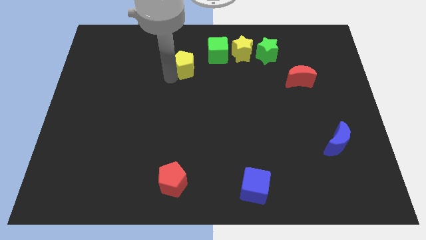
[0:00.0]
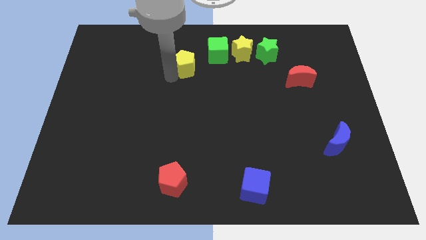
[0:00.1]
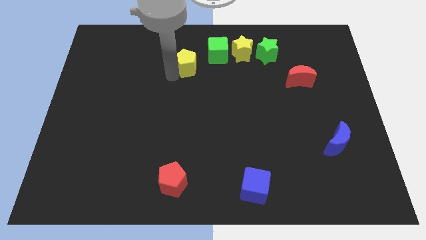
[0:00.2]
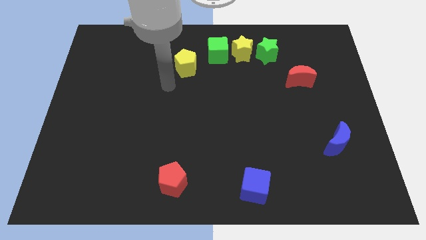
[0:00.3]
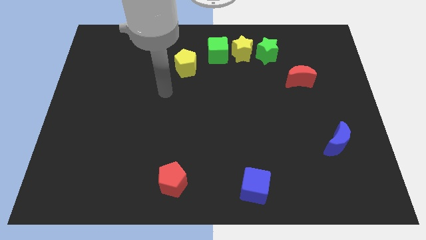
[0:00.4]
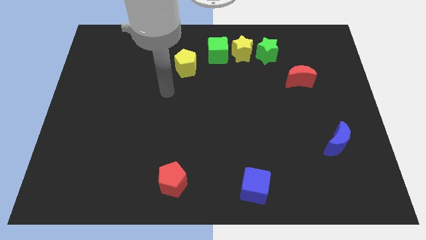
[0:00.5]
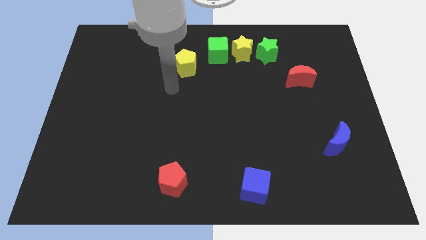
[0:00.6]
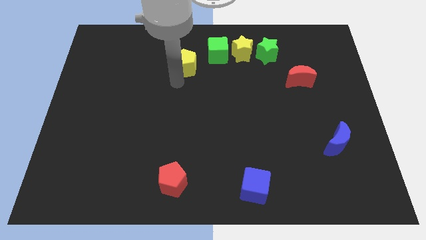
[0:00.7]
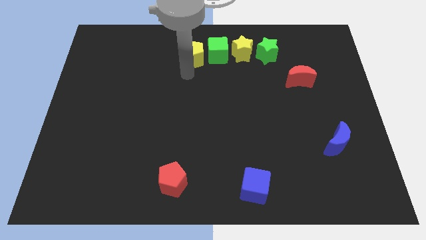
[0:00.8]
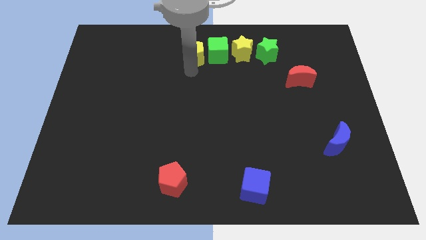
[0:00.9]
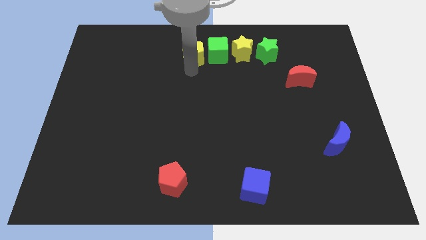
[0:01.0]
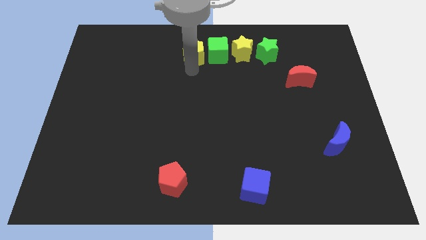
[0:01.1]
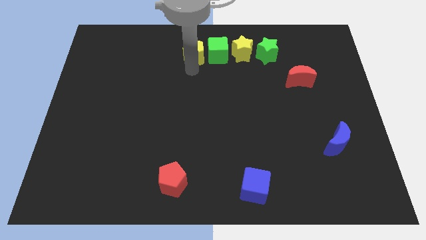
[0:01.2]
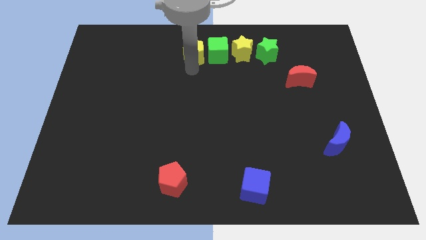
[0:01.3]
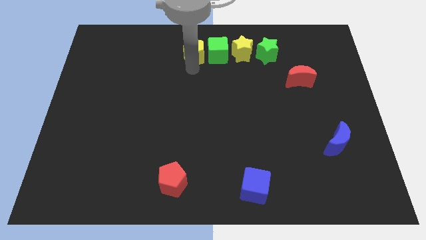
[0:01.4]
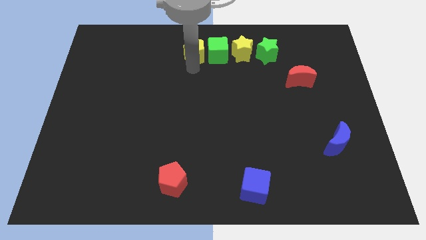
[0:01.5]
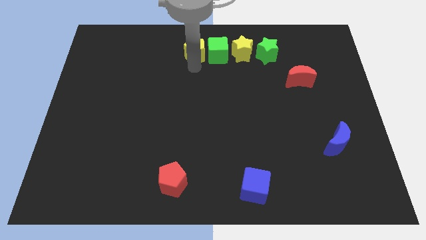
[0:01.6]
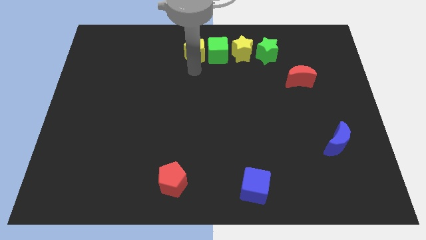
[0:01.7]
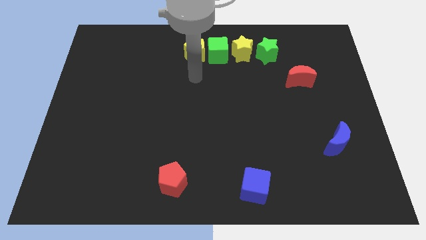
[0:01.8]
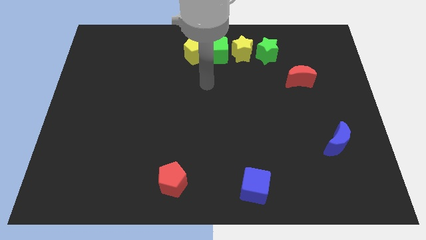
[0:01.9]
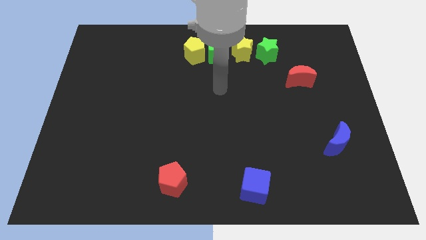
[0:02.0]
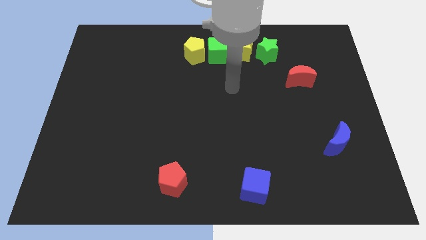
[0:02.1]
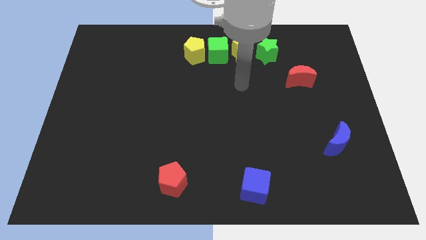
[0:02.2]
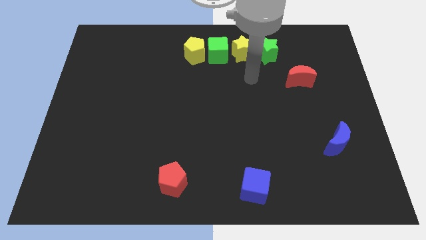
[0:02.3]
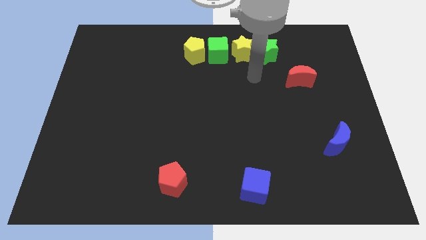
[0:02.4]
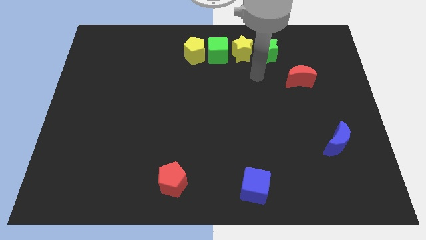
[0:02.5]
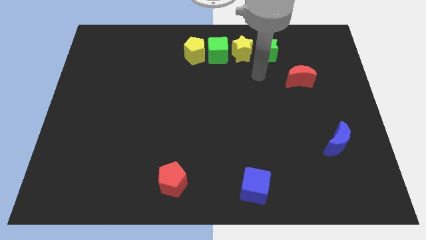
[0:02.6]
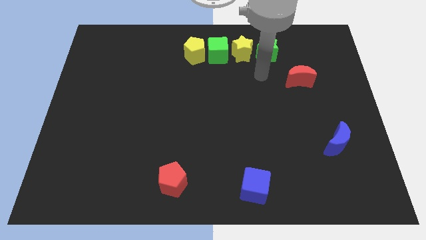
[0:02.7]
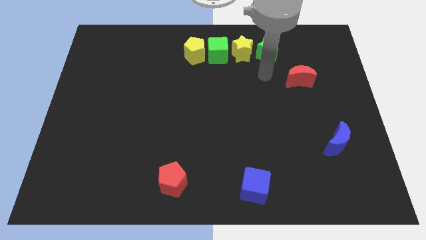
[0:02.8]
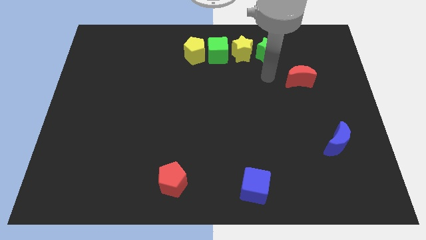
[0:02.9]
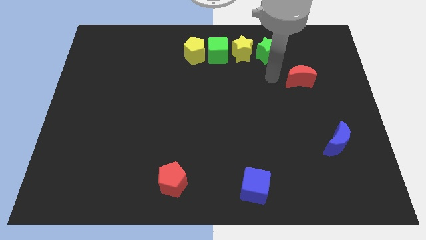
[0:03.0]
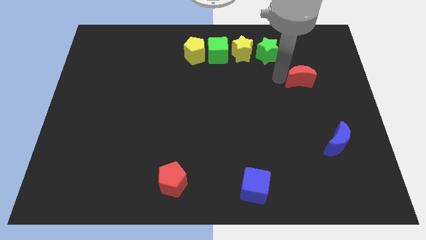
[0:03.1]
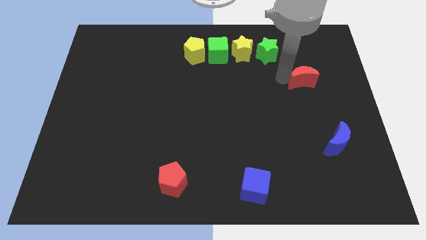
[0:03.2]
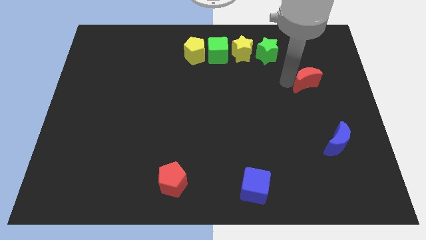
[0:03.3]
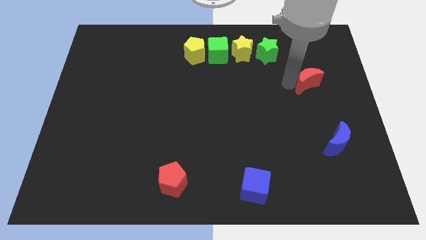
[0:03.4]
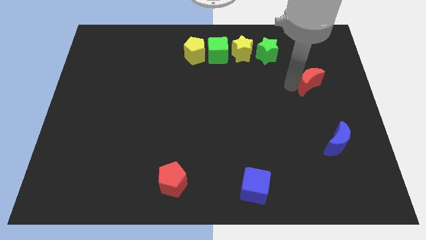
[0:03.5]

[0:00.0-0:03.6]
move red crescent slightly down

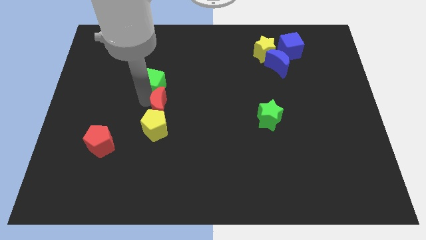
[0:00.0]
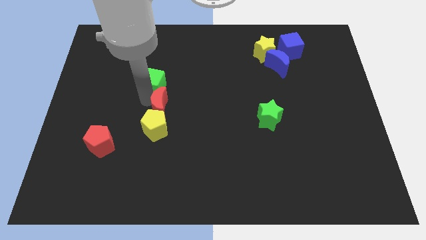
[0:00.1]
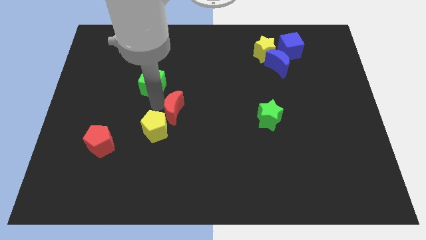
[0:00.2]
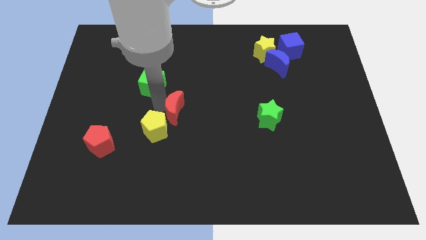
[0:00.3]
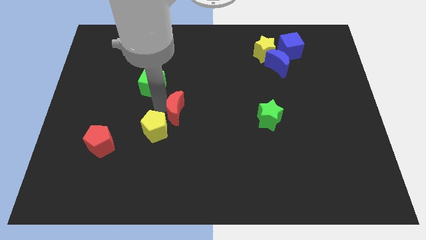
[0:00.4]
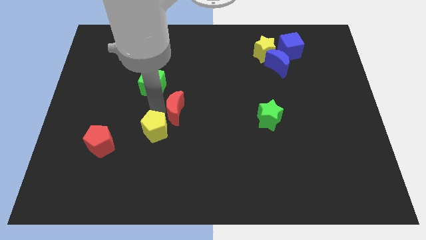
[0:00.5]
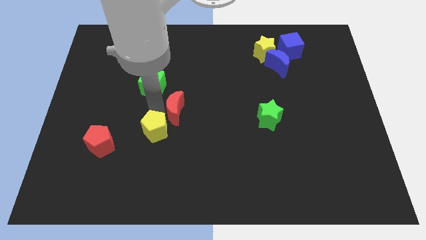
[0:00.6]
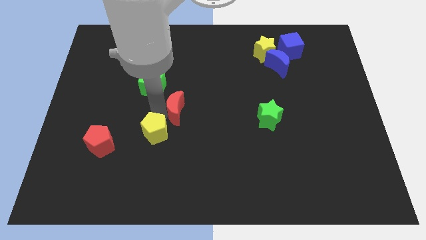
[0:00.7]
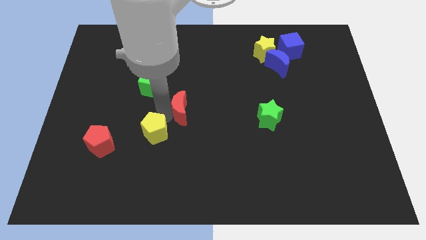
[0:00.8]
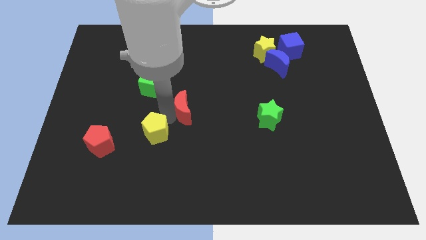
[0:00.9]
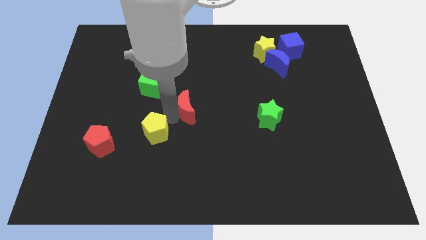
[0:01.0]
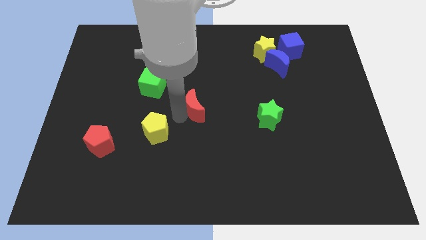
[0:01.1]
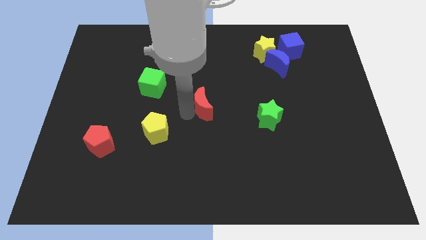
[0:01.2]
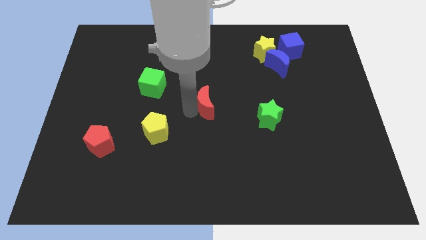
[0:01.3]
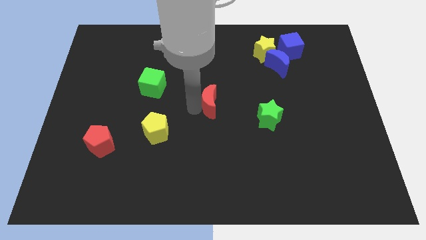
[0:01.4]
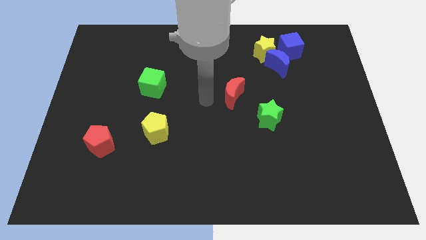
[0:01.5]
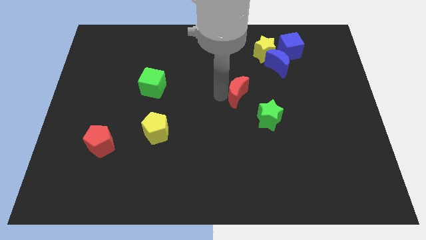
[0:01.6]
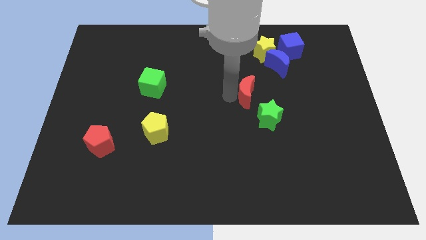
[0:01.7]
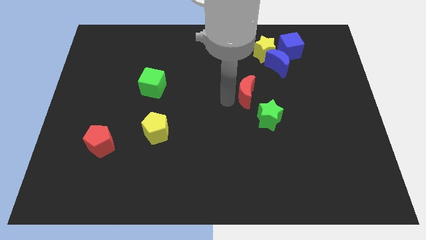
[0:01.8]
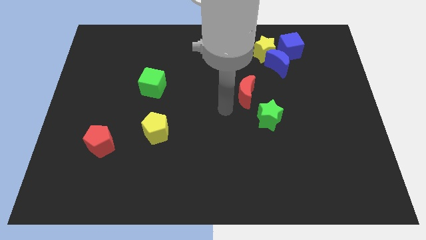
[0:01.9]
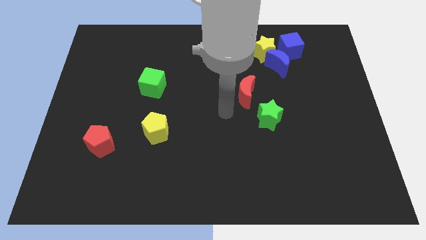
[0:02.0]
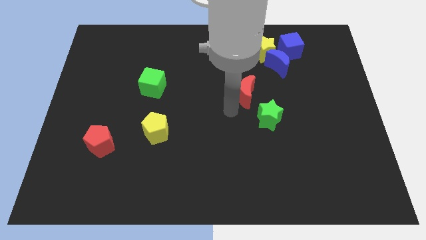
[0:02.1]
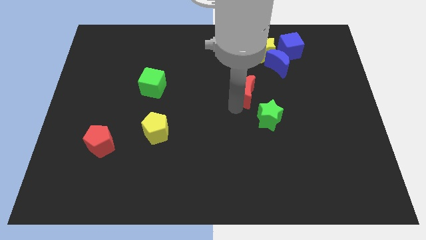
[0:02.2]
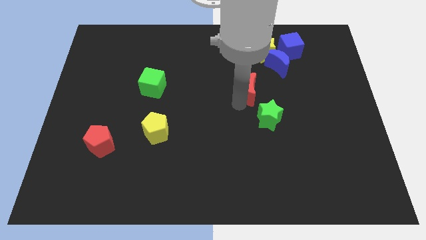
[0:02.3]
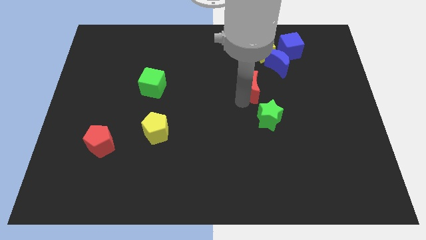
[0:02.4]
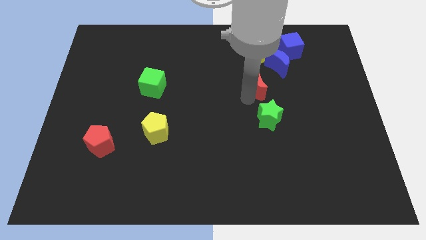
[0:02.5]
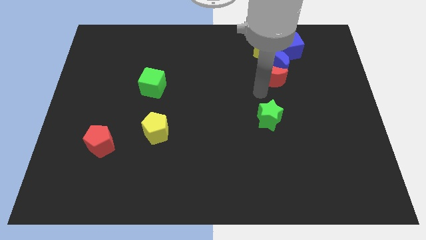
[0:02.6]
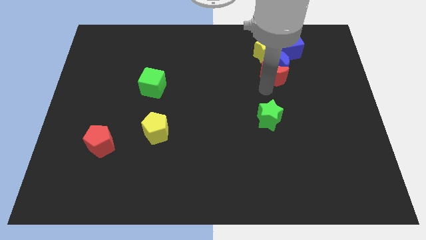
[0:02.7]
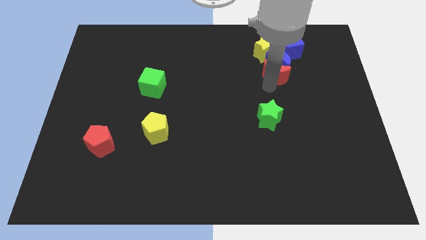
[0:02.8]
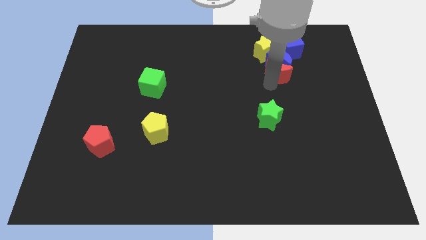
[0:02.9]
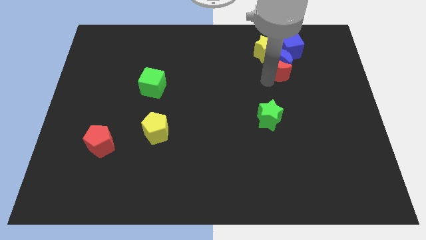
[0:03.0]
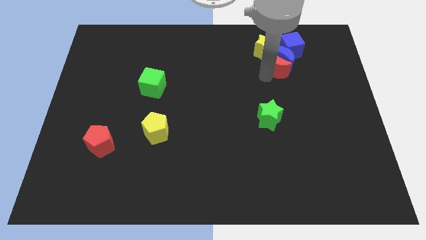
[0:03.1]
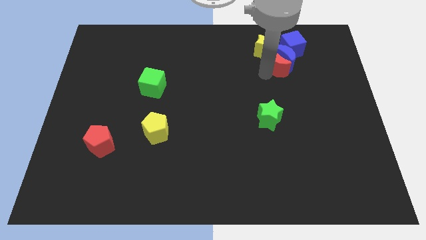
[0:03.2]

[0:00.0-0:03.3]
push red moon into blue moon

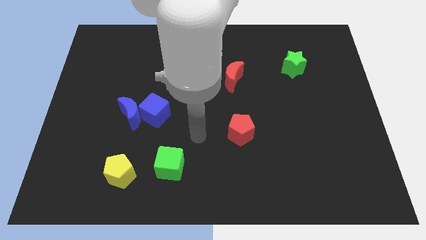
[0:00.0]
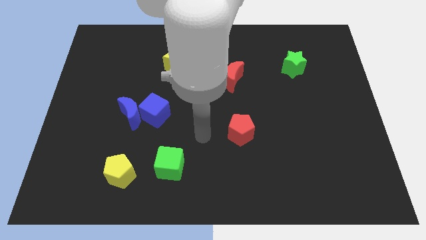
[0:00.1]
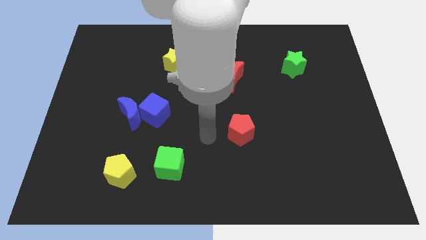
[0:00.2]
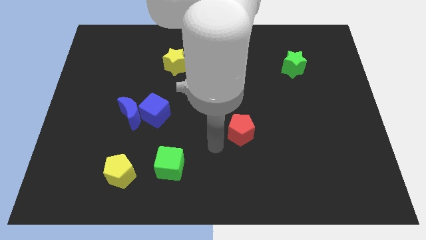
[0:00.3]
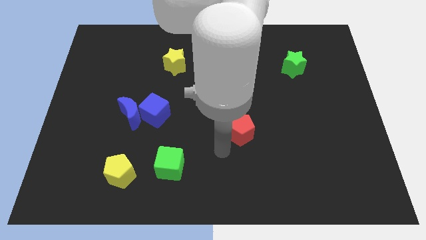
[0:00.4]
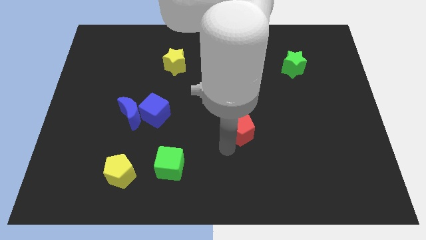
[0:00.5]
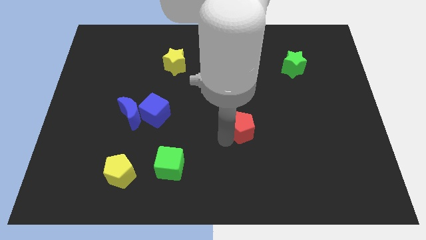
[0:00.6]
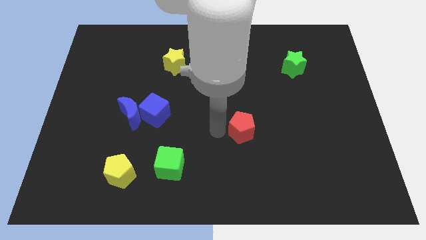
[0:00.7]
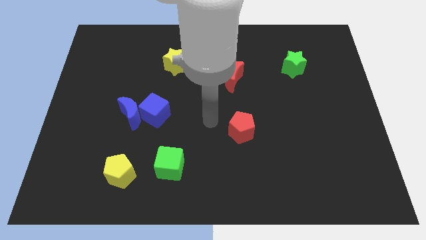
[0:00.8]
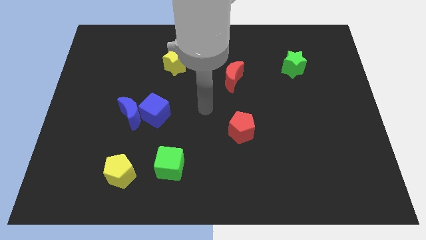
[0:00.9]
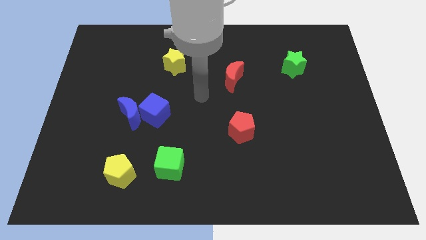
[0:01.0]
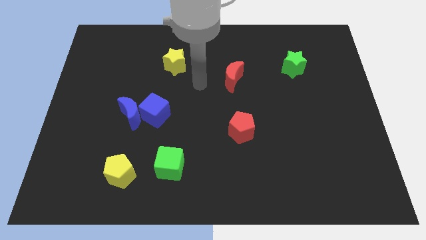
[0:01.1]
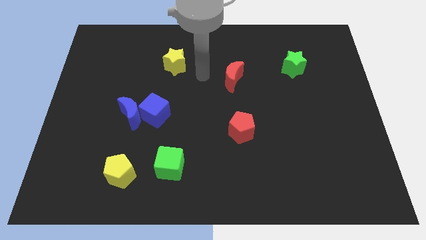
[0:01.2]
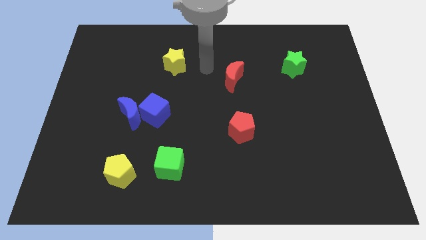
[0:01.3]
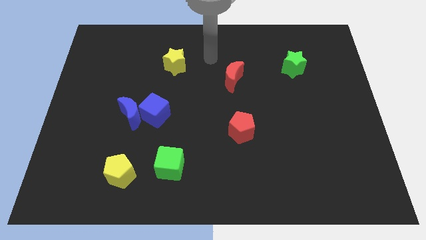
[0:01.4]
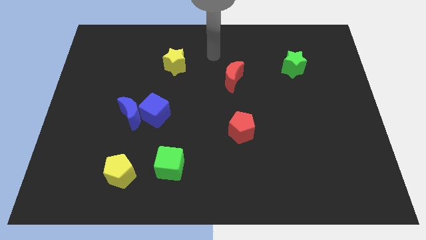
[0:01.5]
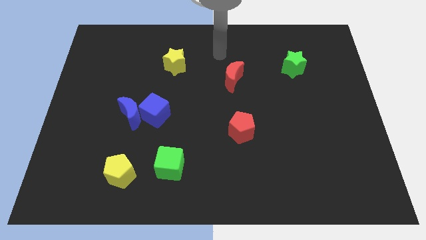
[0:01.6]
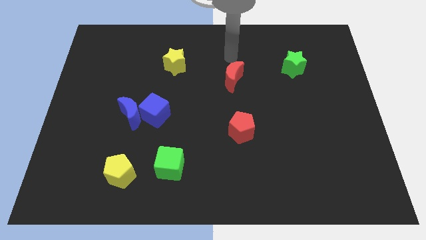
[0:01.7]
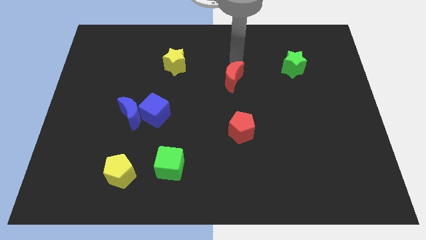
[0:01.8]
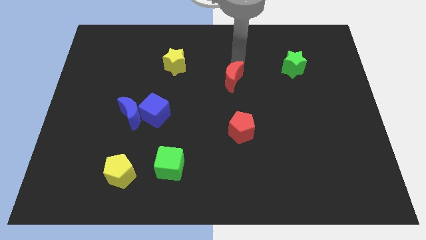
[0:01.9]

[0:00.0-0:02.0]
point the arm at the top of the red crescent
